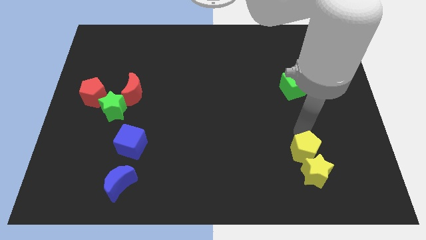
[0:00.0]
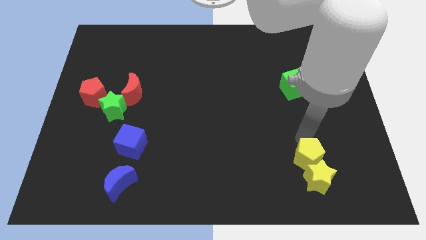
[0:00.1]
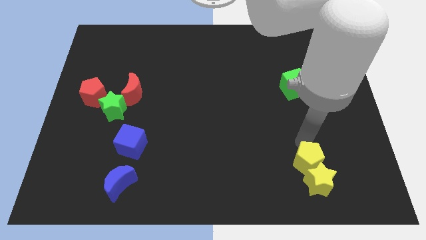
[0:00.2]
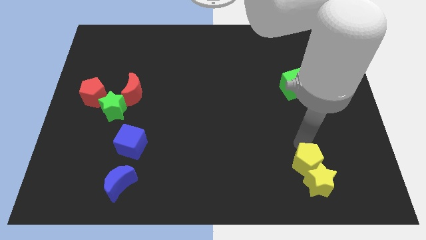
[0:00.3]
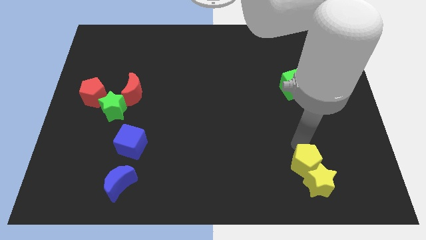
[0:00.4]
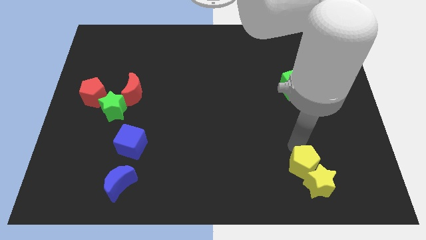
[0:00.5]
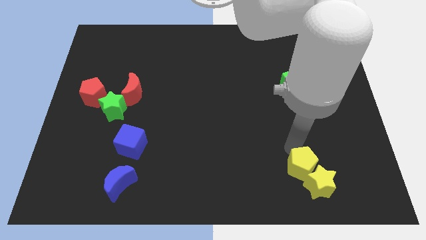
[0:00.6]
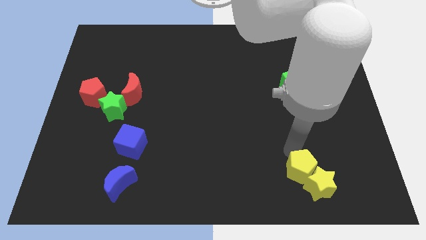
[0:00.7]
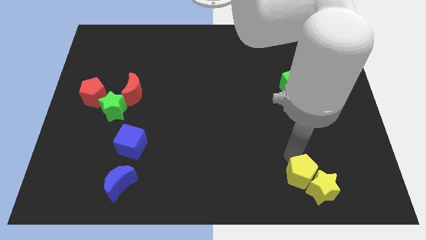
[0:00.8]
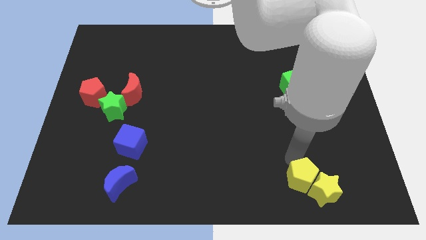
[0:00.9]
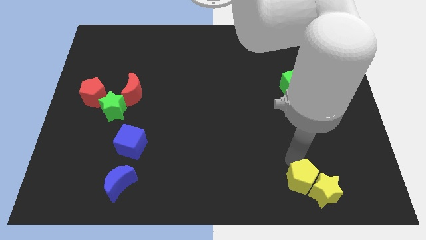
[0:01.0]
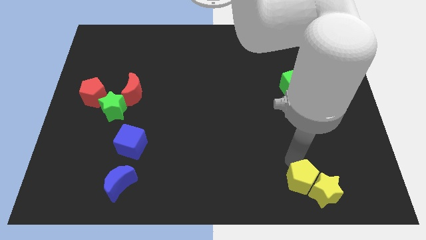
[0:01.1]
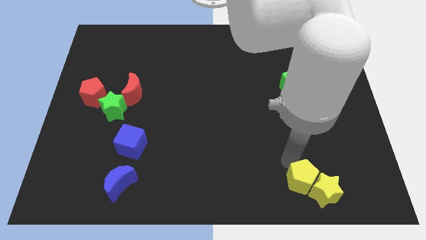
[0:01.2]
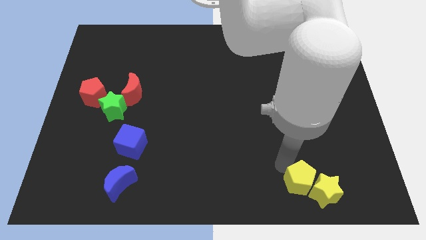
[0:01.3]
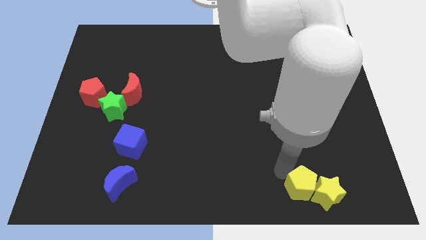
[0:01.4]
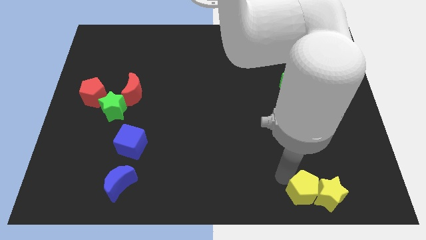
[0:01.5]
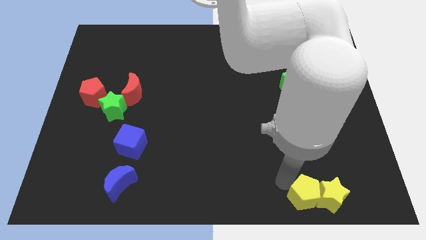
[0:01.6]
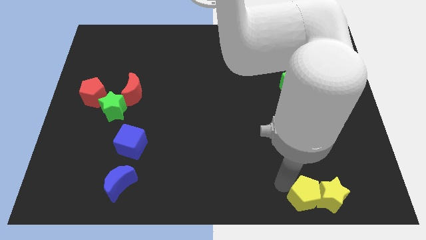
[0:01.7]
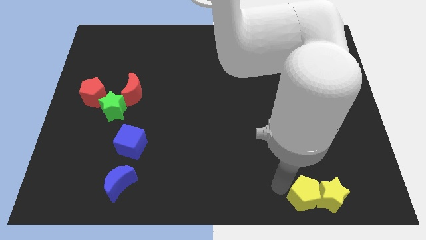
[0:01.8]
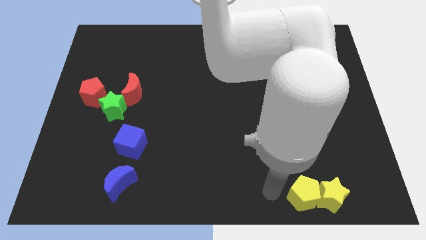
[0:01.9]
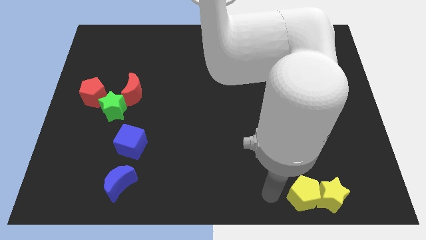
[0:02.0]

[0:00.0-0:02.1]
place the yellow pentagon and yellow star vertically below the green cube

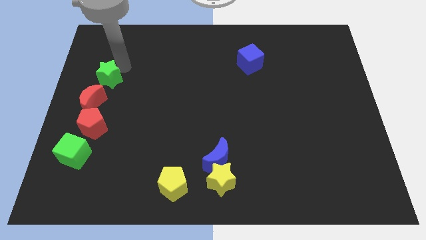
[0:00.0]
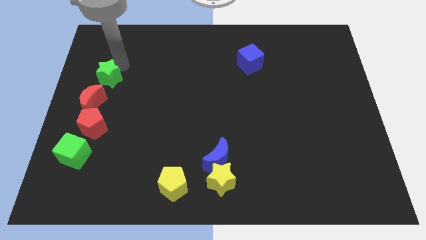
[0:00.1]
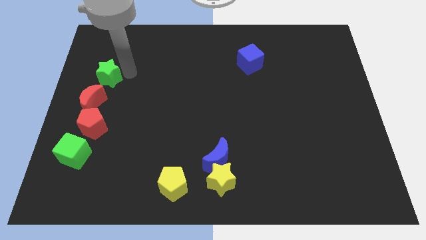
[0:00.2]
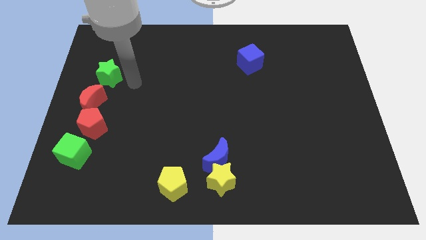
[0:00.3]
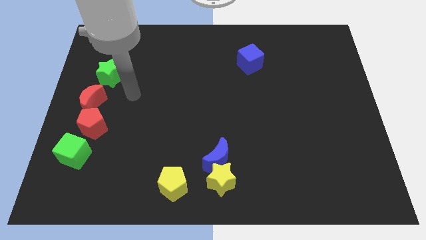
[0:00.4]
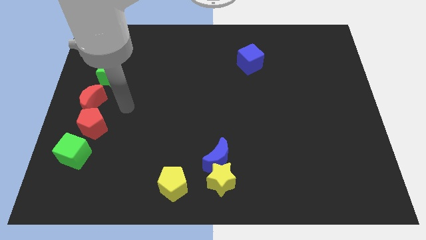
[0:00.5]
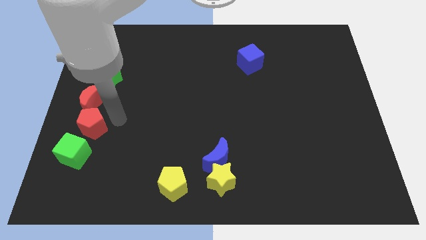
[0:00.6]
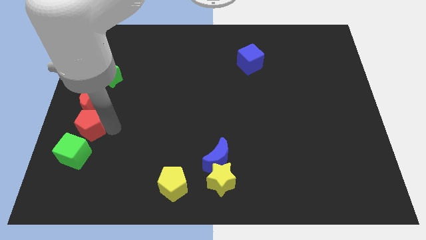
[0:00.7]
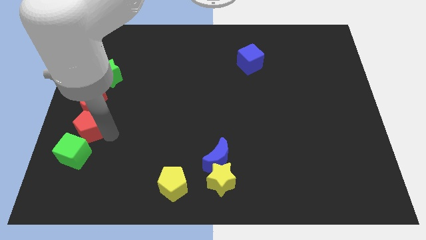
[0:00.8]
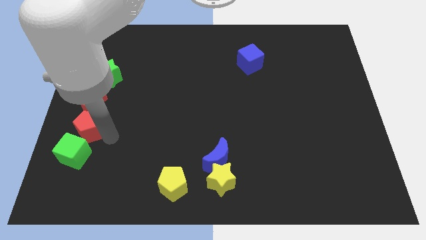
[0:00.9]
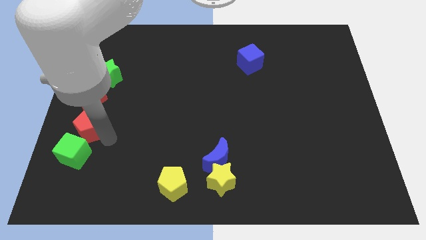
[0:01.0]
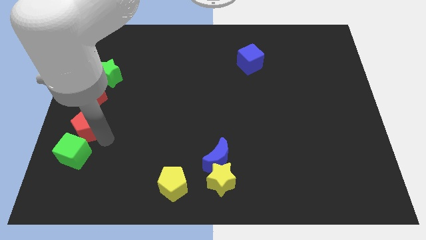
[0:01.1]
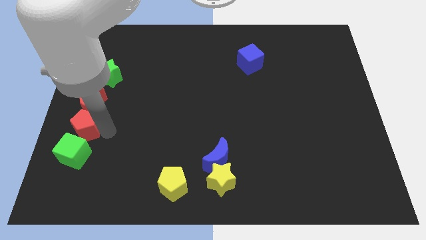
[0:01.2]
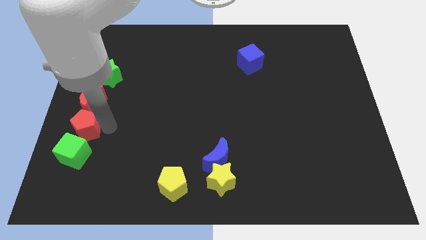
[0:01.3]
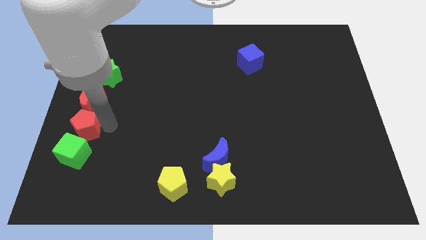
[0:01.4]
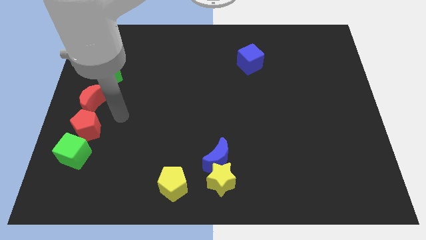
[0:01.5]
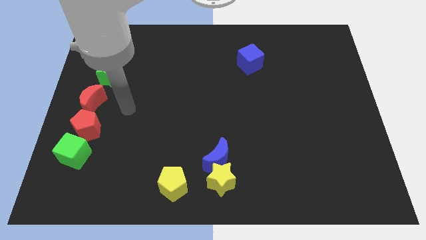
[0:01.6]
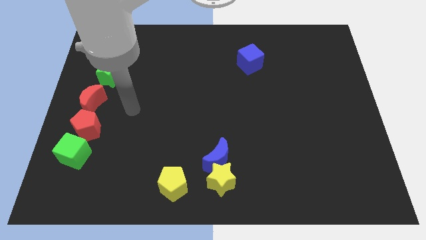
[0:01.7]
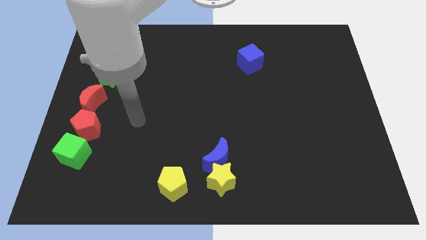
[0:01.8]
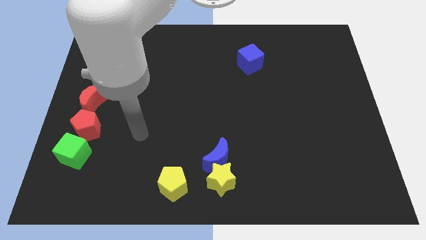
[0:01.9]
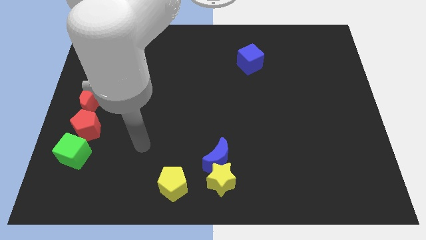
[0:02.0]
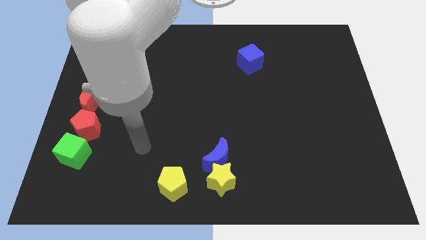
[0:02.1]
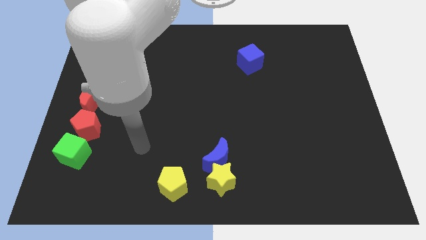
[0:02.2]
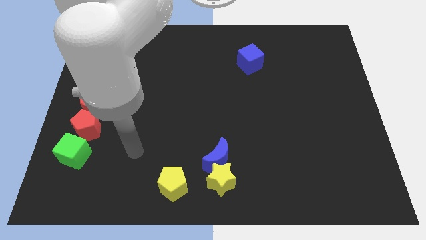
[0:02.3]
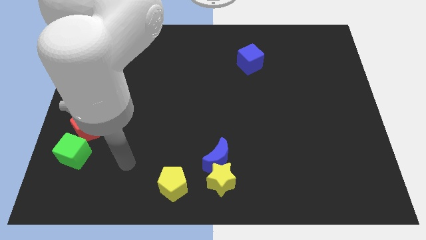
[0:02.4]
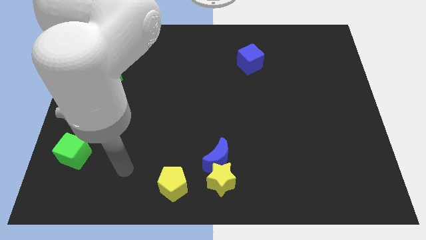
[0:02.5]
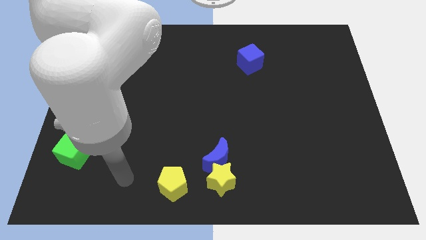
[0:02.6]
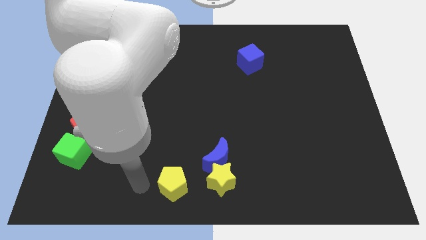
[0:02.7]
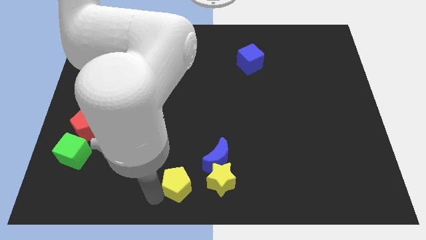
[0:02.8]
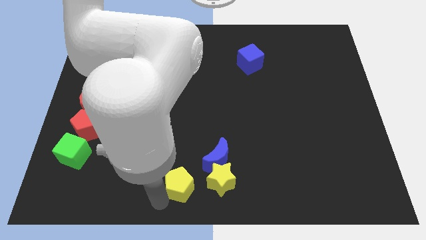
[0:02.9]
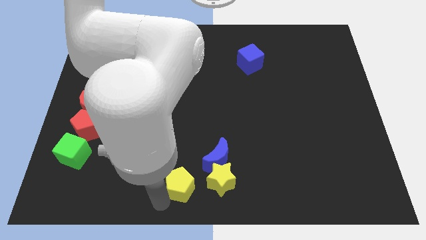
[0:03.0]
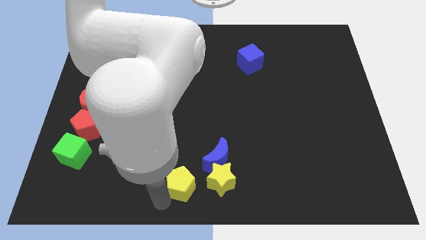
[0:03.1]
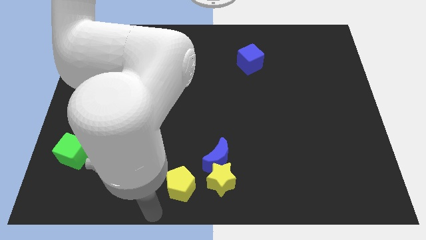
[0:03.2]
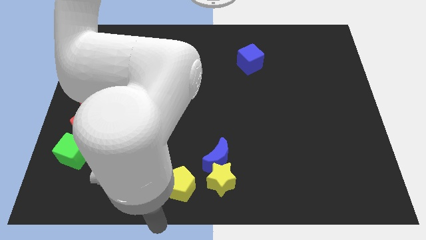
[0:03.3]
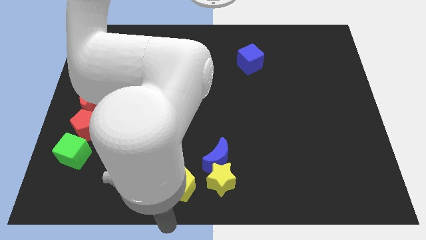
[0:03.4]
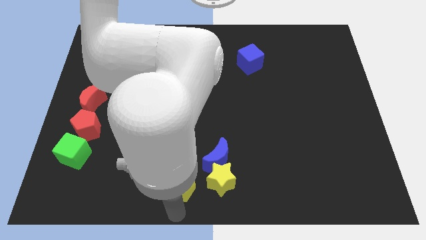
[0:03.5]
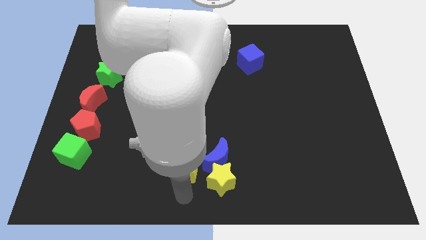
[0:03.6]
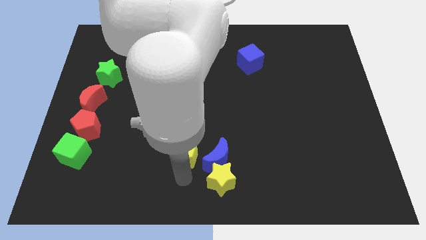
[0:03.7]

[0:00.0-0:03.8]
place your arm below yellow pentagon

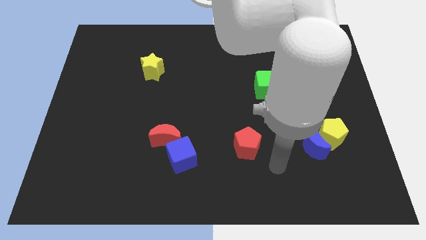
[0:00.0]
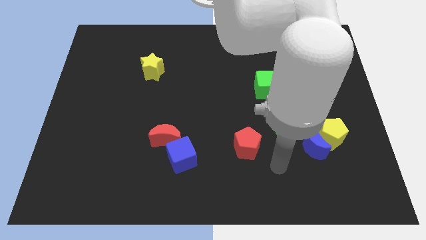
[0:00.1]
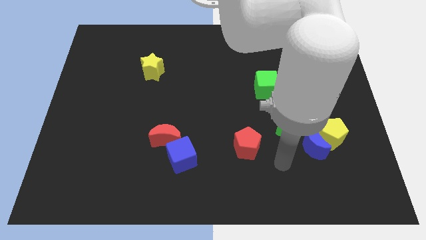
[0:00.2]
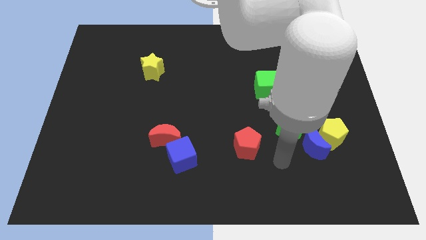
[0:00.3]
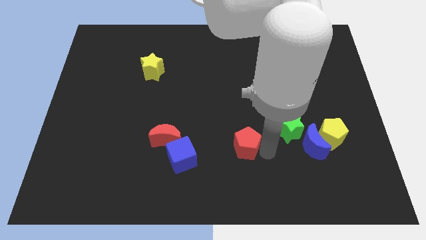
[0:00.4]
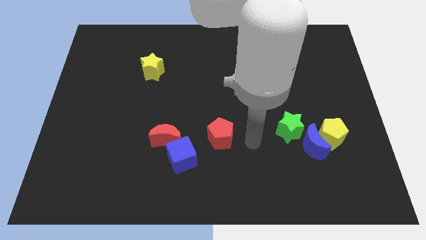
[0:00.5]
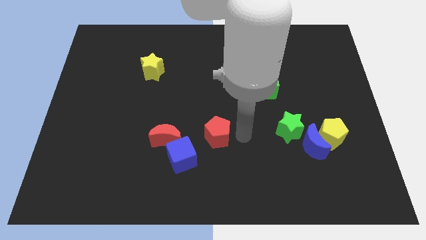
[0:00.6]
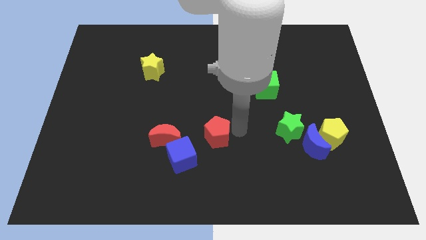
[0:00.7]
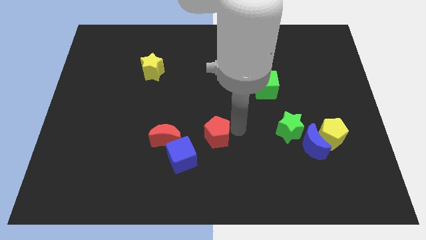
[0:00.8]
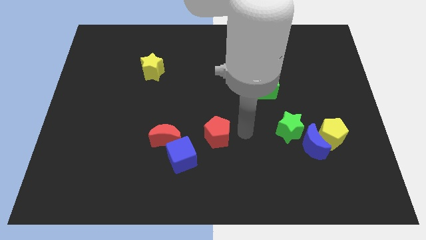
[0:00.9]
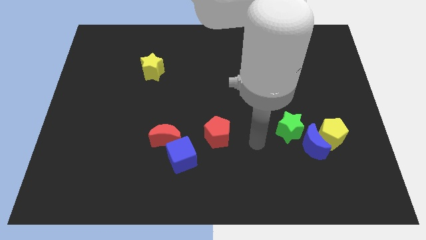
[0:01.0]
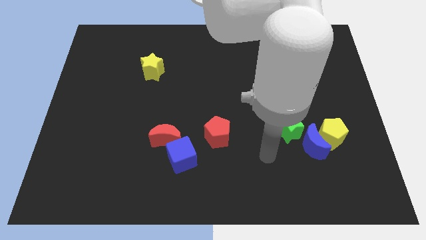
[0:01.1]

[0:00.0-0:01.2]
slightly push the red pentagon upwards to the right of red crescent

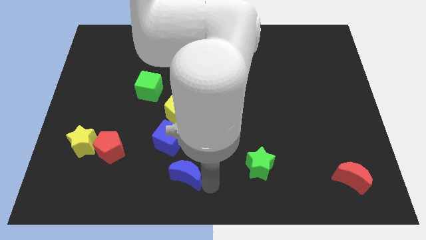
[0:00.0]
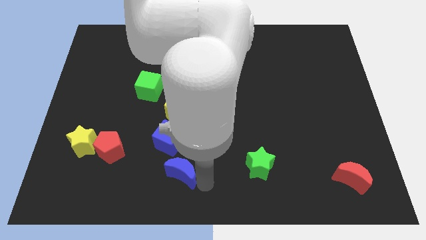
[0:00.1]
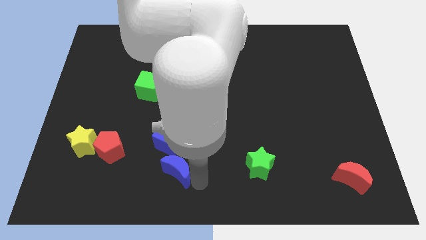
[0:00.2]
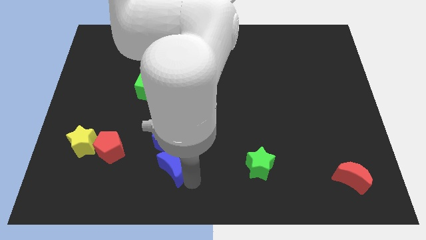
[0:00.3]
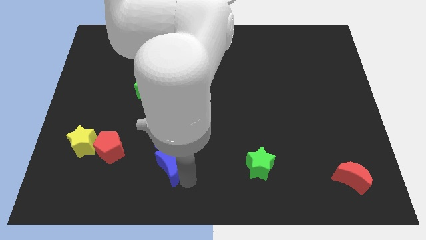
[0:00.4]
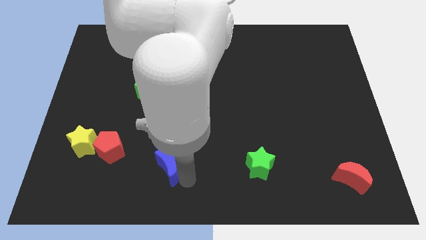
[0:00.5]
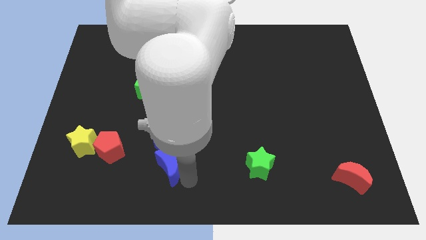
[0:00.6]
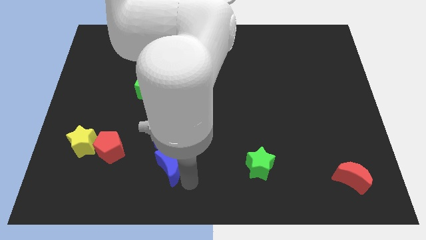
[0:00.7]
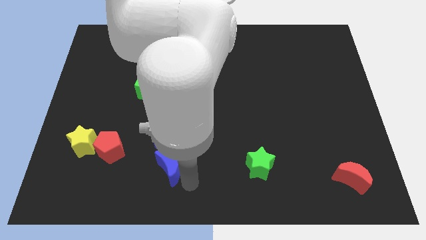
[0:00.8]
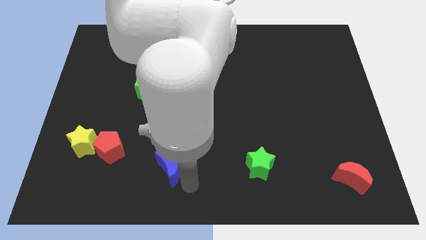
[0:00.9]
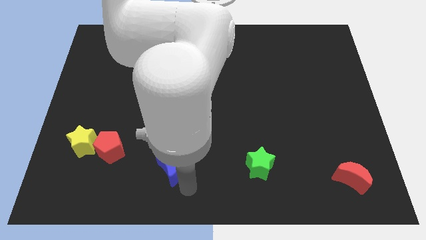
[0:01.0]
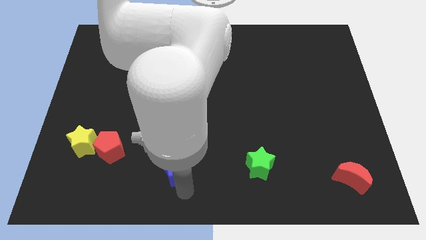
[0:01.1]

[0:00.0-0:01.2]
push blue moon into blue cube

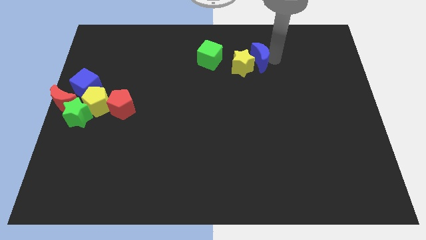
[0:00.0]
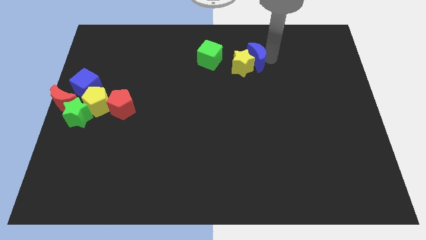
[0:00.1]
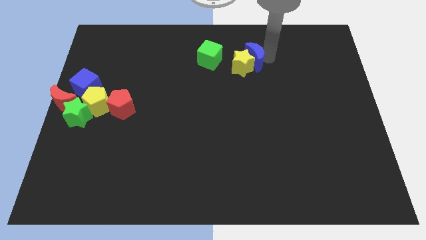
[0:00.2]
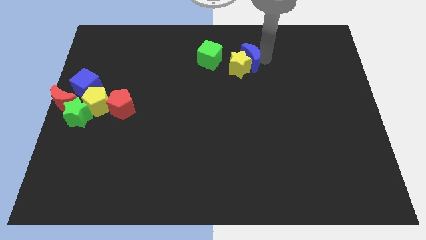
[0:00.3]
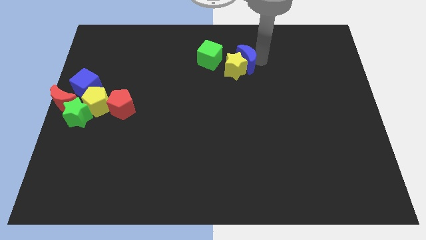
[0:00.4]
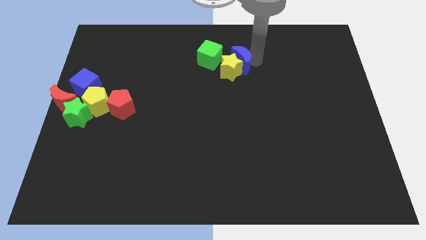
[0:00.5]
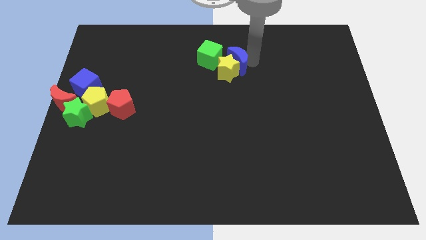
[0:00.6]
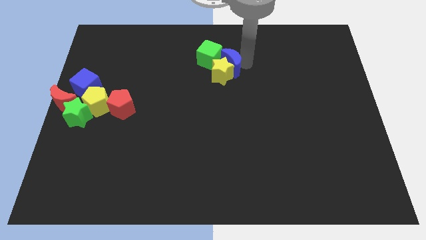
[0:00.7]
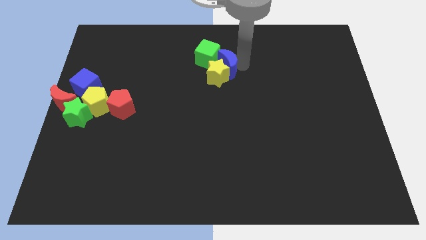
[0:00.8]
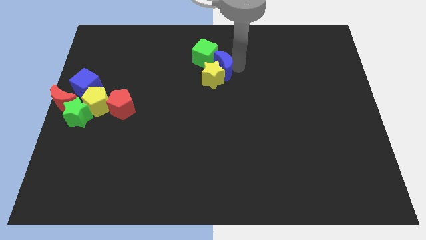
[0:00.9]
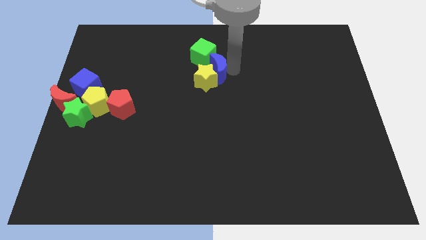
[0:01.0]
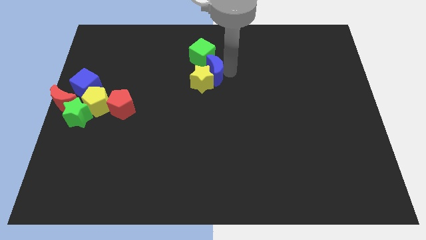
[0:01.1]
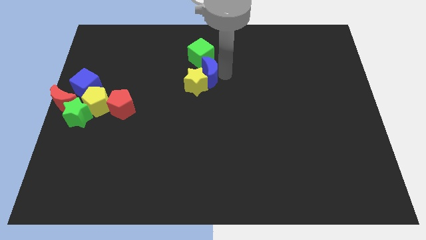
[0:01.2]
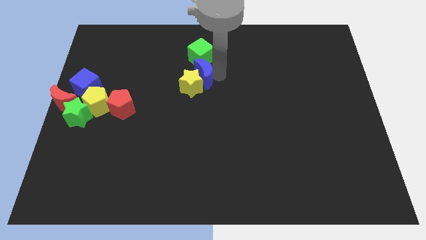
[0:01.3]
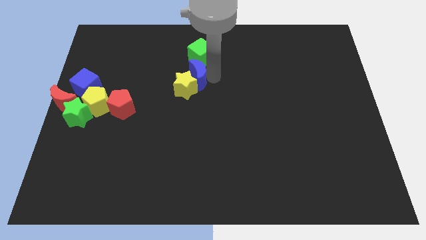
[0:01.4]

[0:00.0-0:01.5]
push the blue crescent into yellow star
